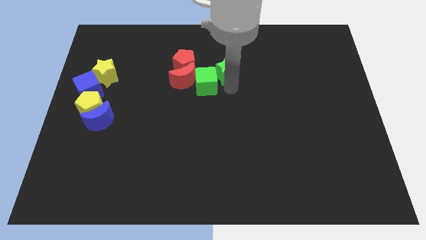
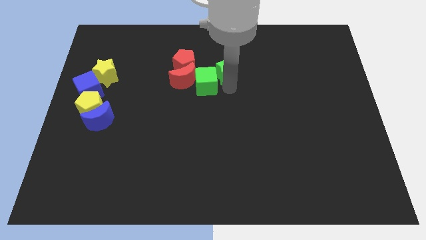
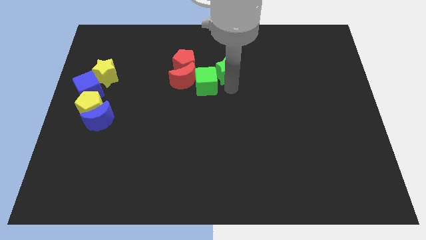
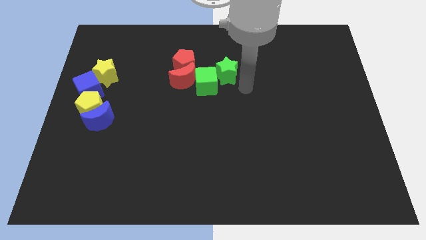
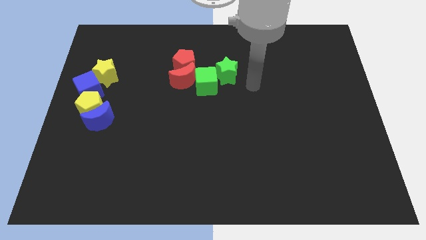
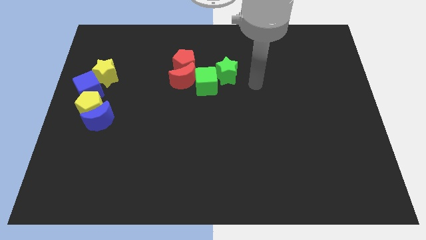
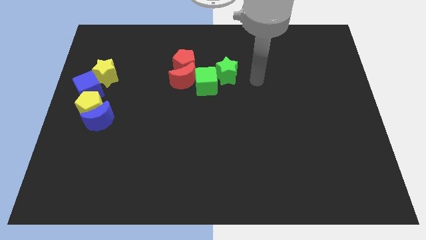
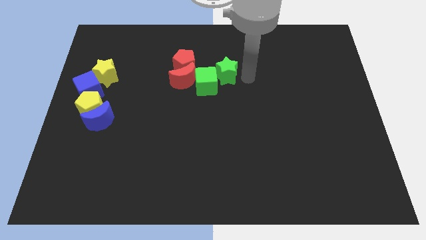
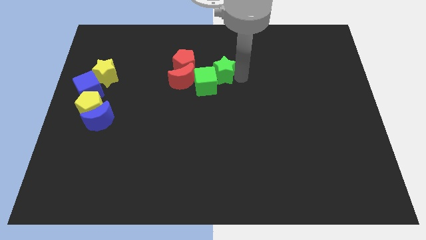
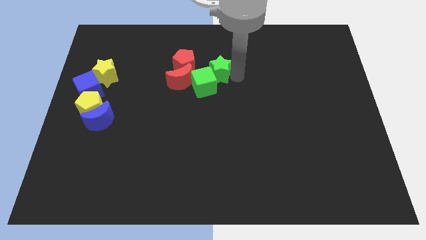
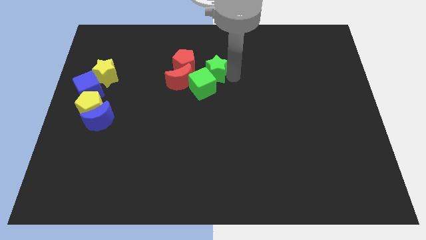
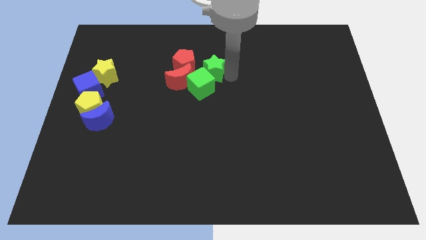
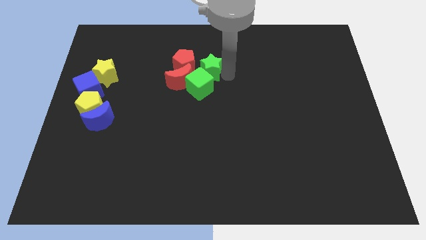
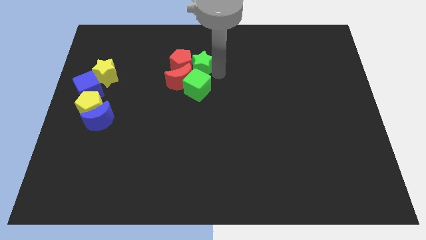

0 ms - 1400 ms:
slightly push the green star right to the red pentagon

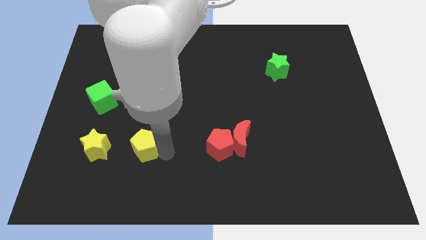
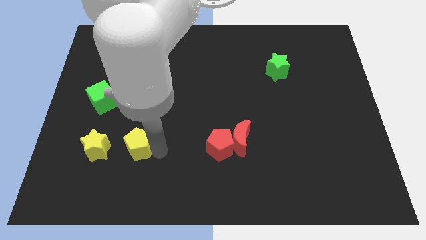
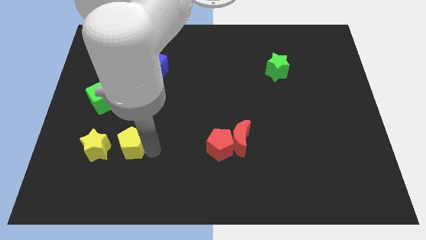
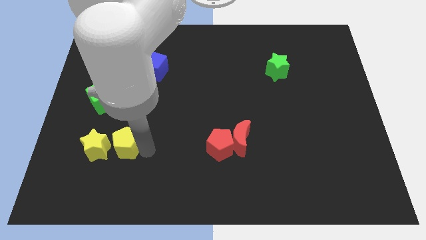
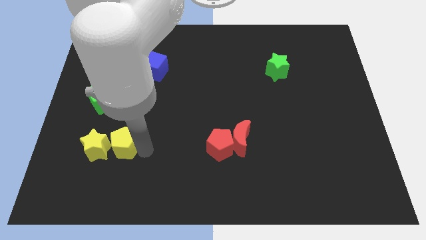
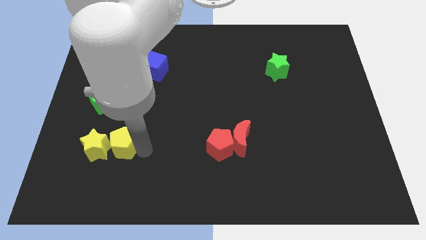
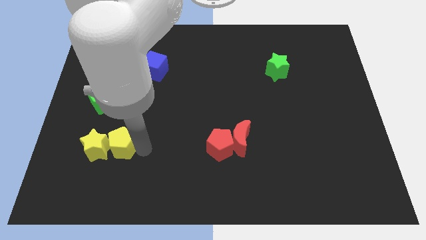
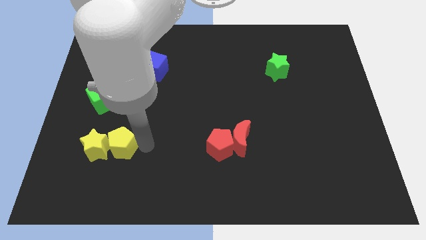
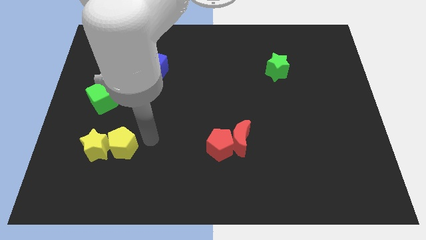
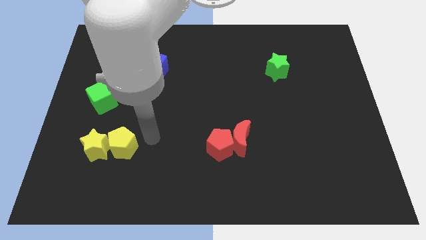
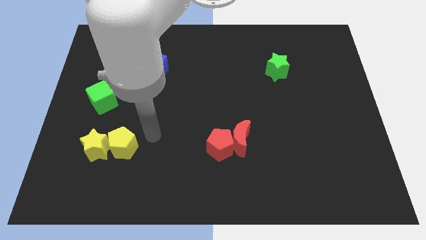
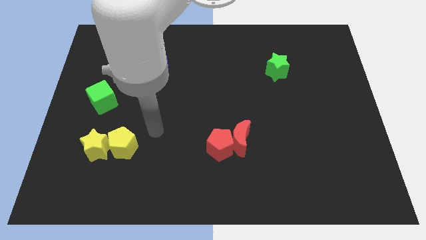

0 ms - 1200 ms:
push the yellow pentagon diagonally to the green cube

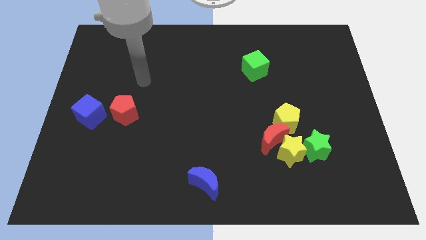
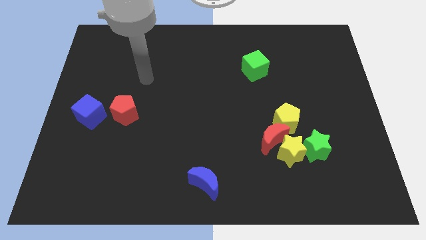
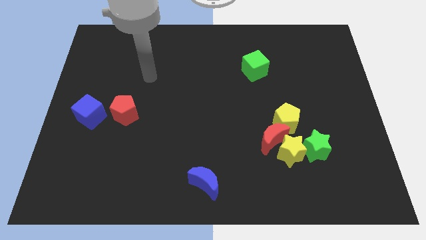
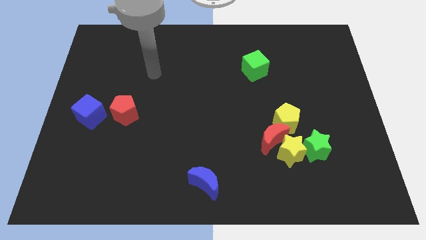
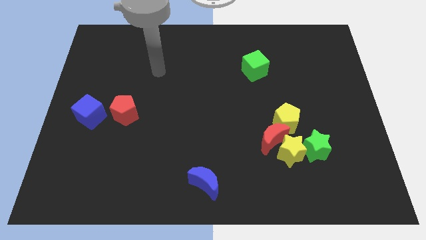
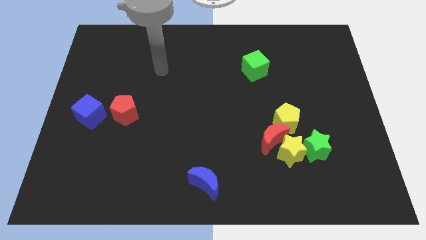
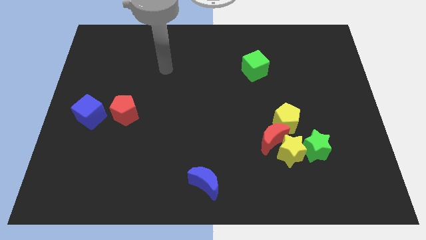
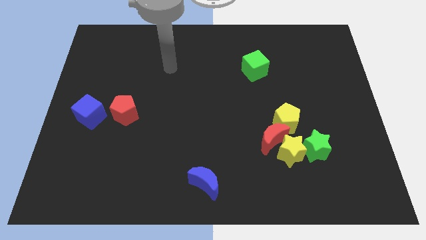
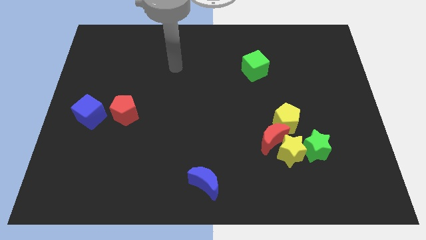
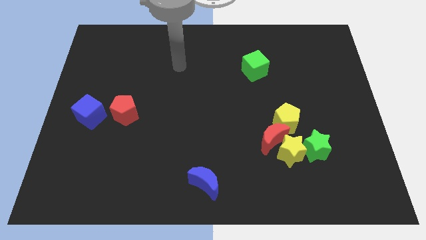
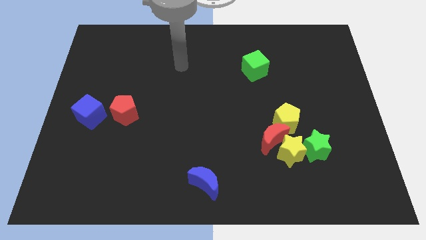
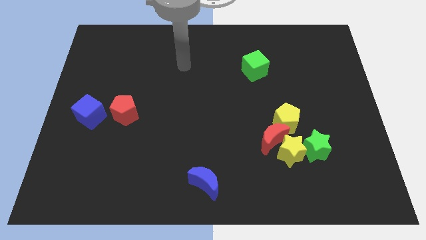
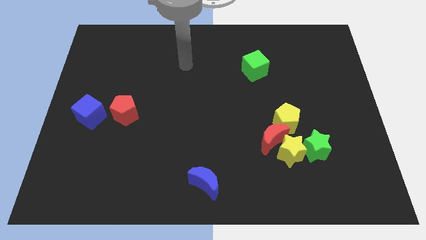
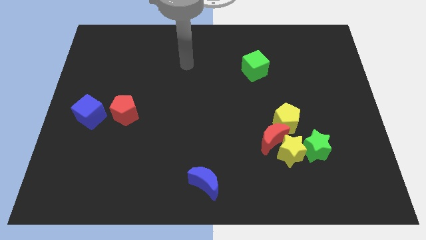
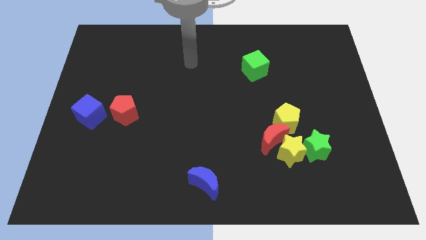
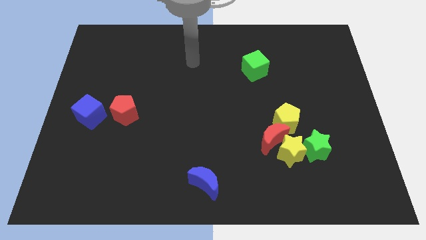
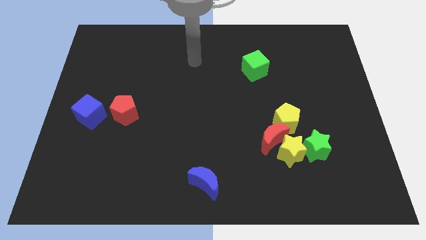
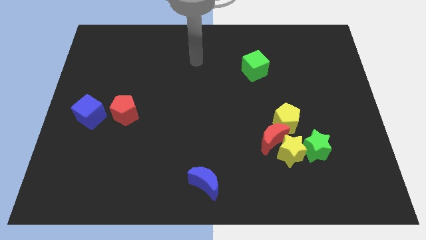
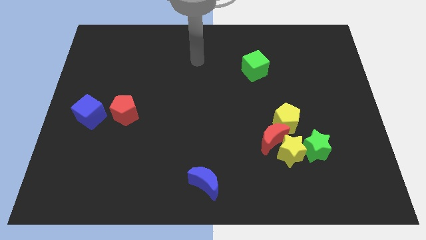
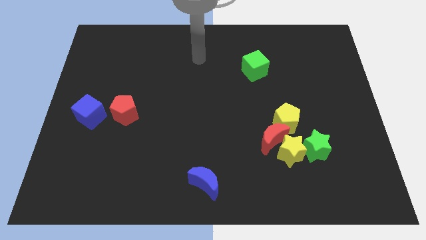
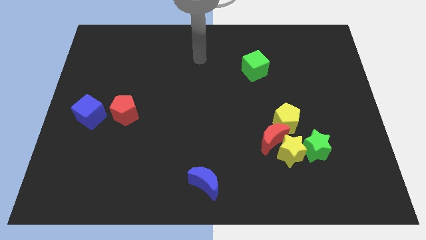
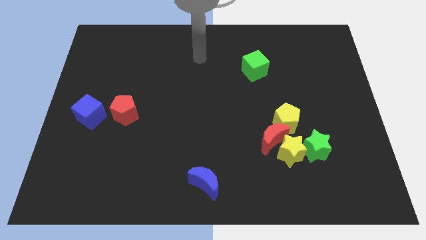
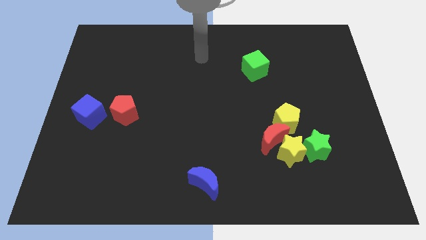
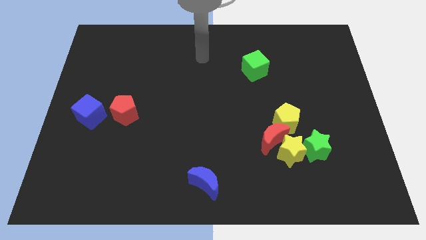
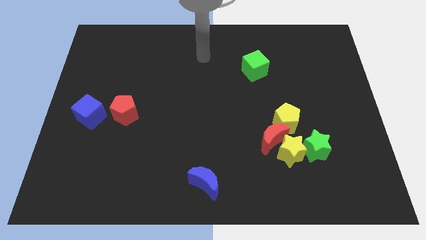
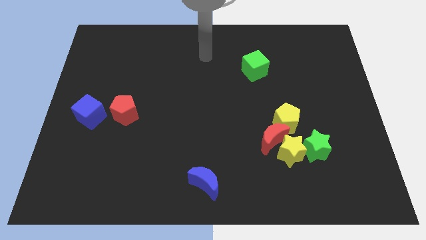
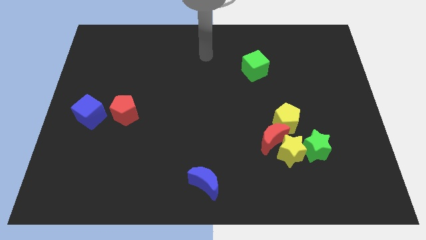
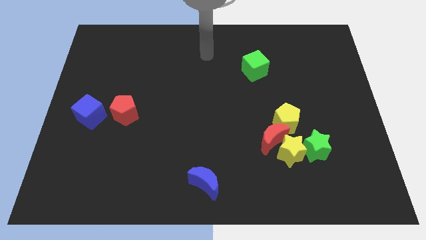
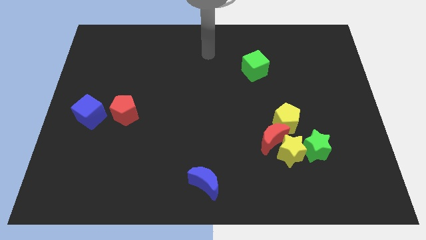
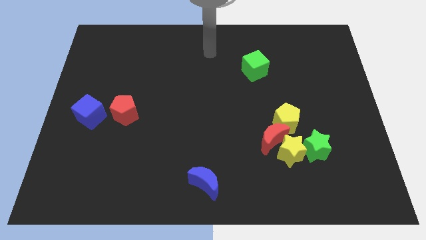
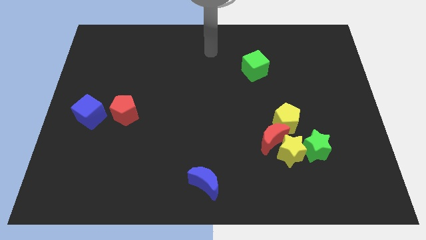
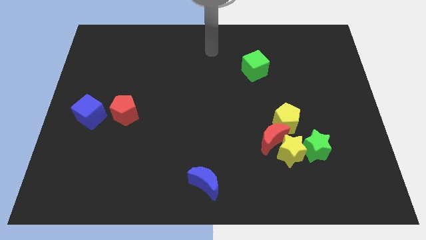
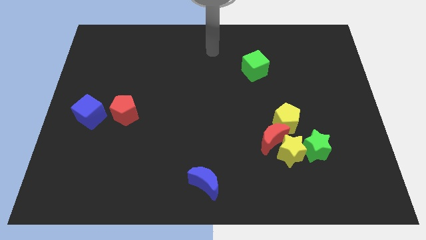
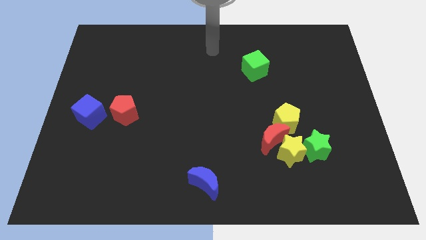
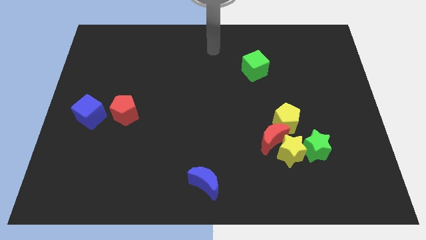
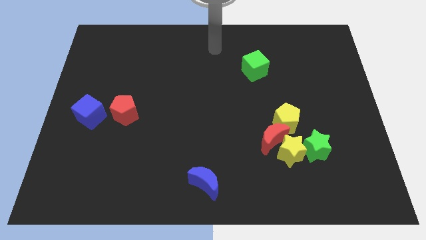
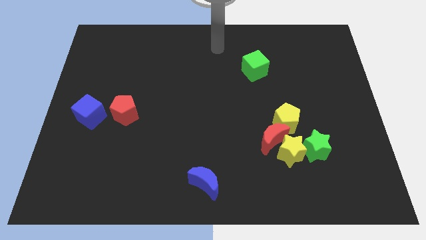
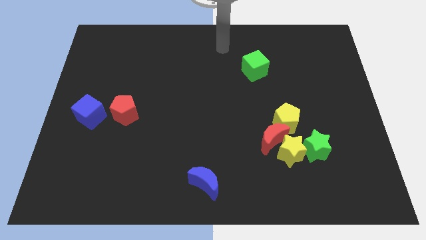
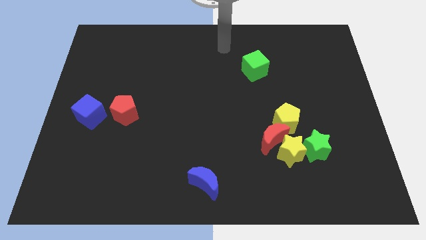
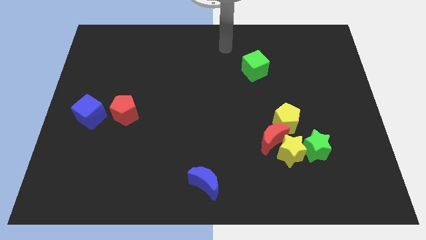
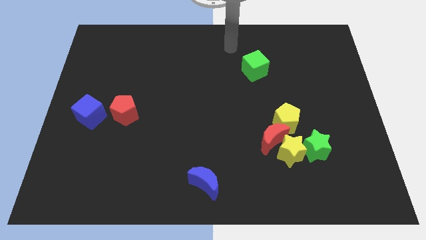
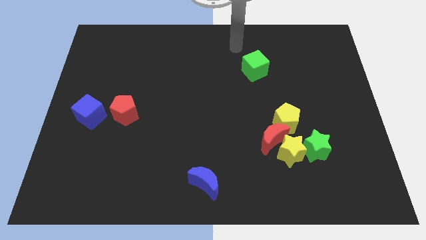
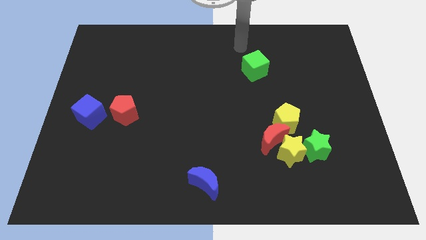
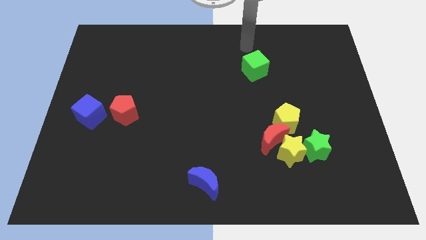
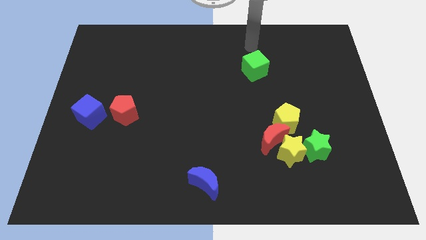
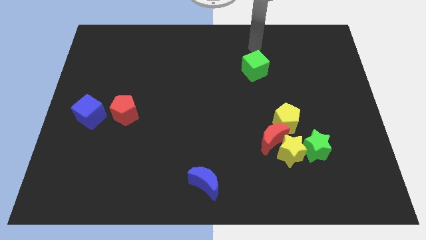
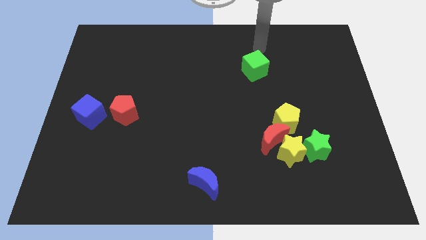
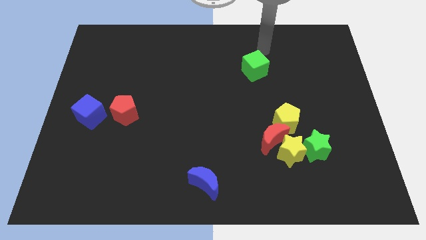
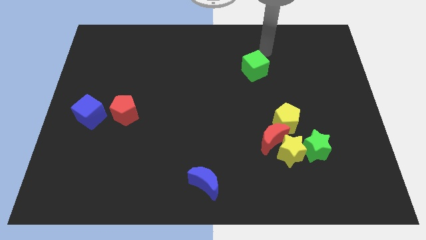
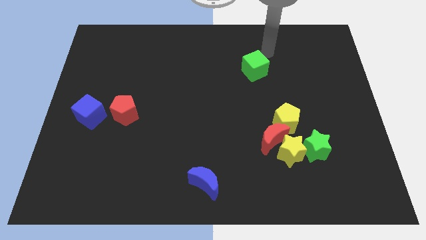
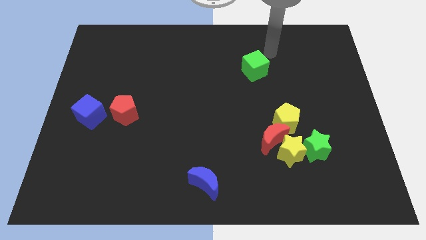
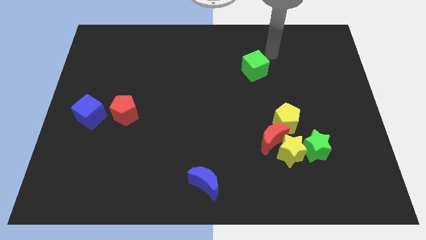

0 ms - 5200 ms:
move arm near green cube

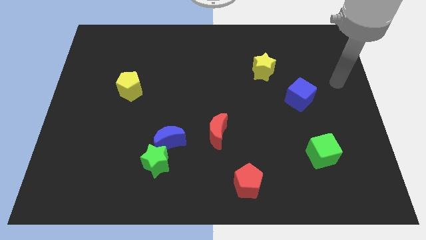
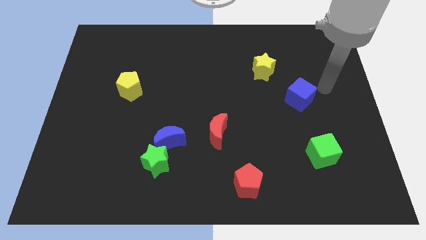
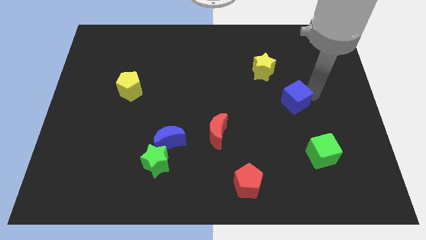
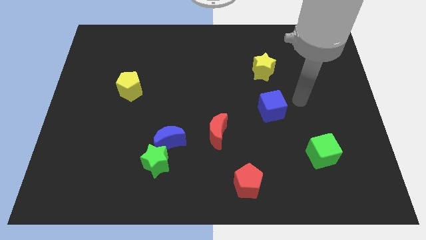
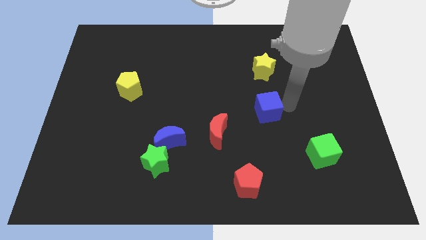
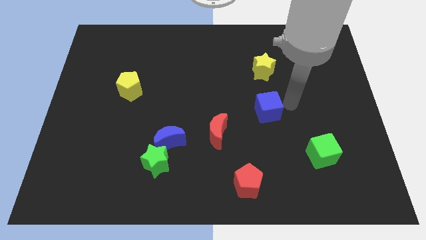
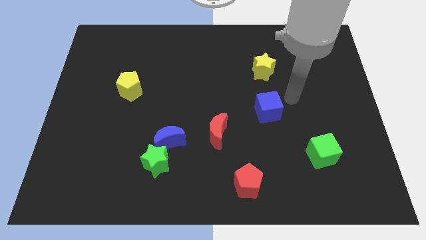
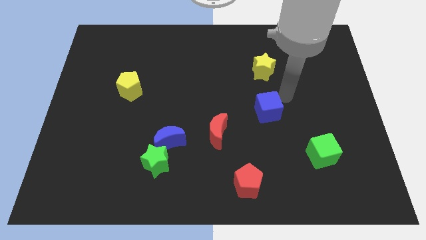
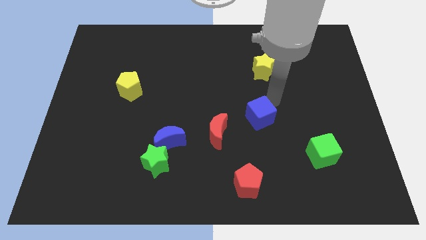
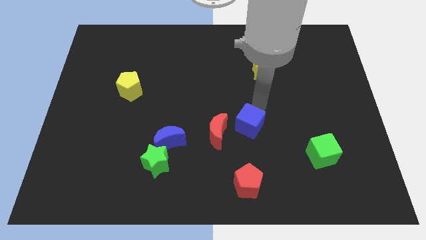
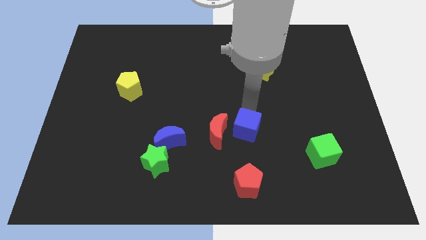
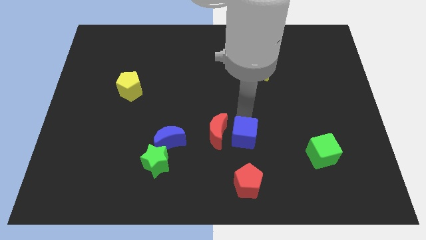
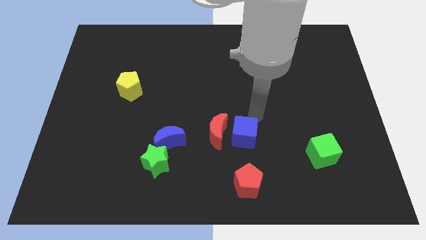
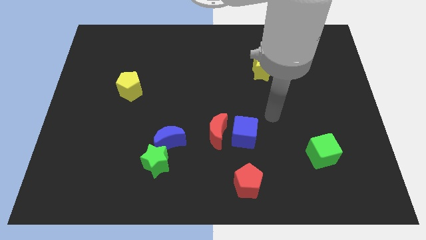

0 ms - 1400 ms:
place the blue cube right to the red crescent
